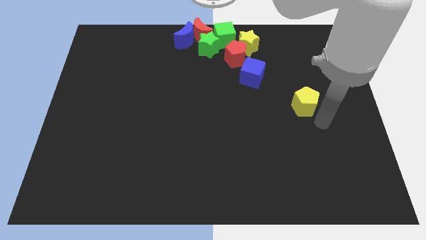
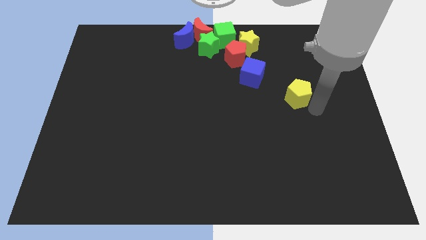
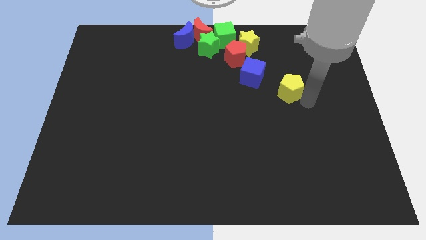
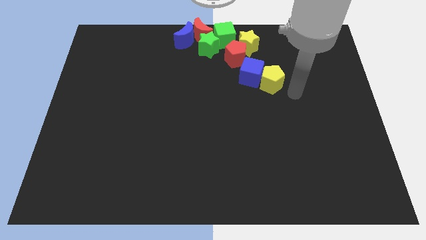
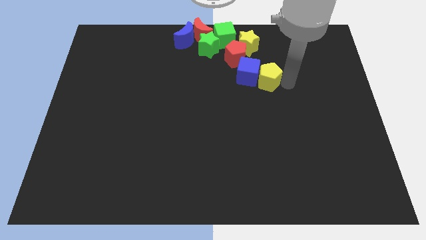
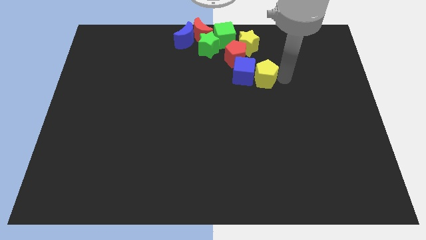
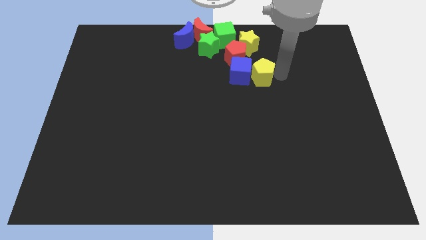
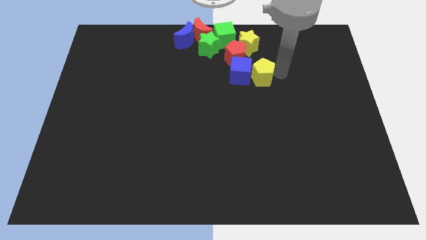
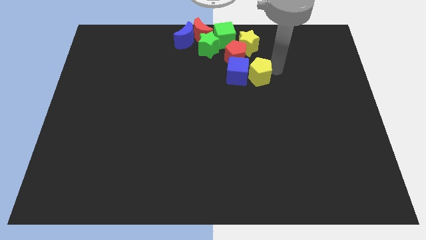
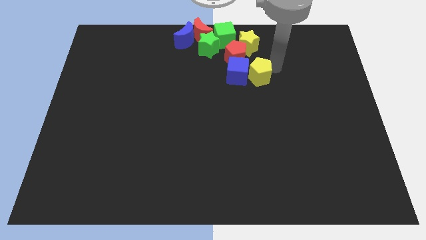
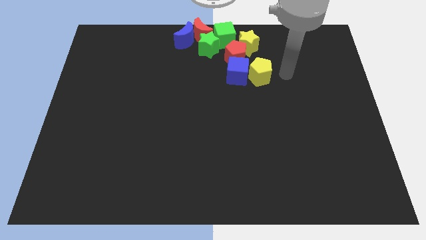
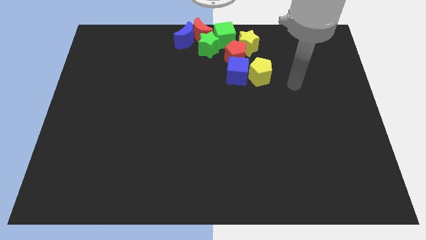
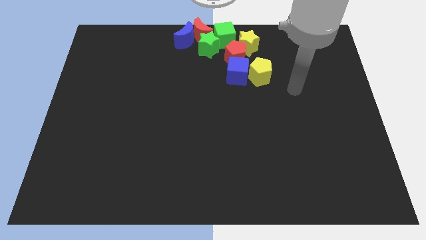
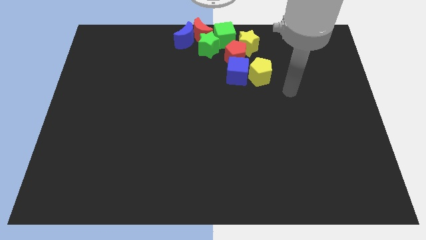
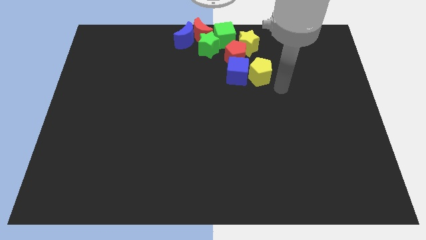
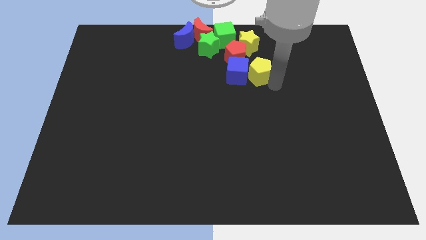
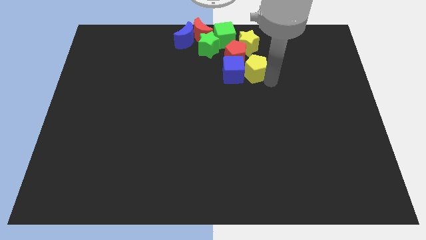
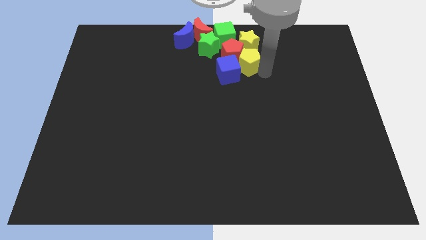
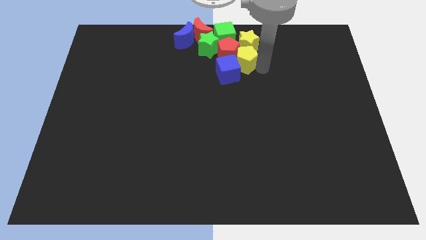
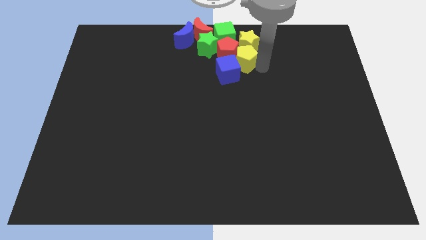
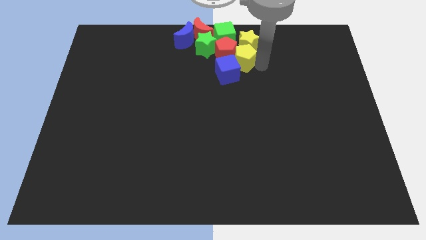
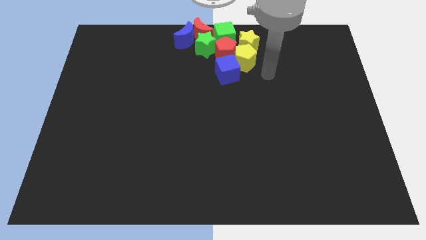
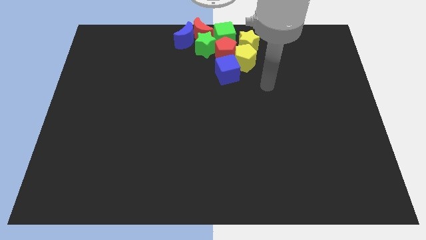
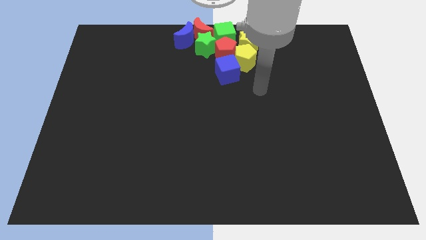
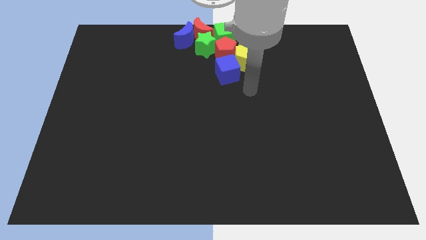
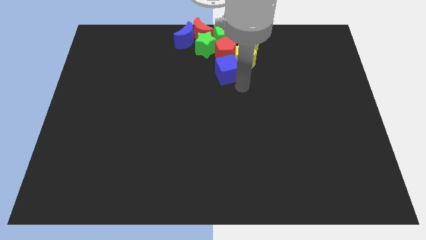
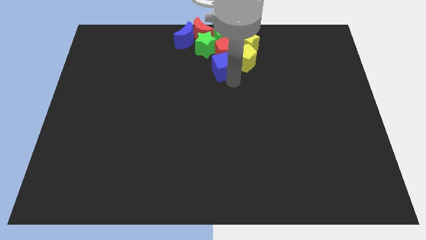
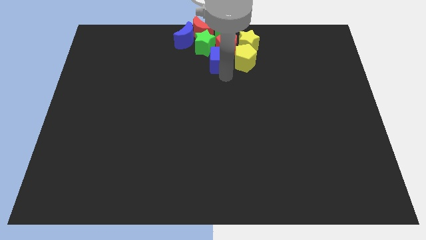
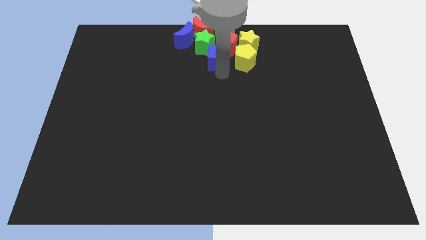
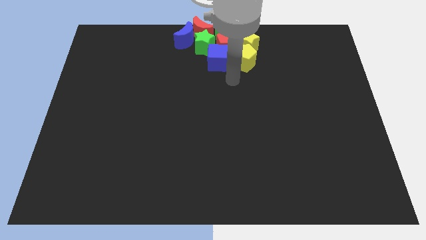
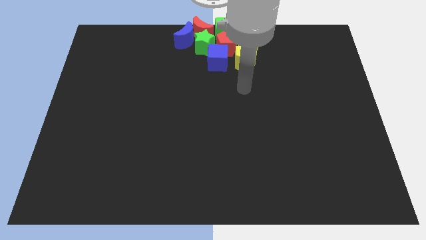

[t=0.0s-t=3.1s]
place the yellow pentagon down to the yellow star

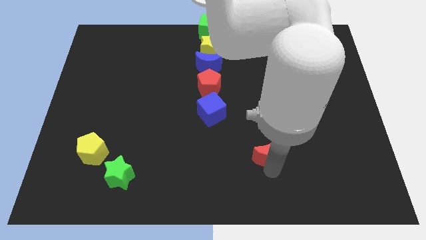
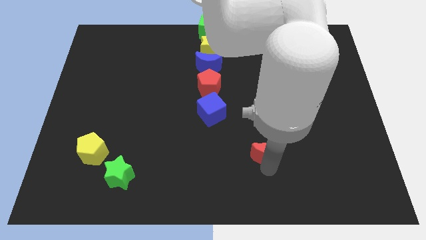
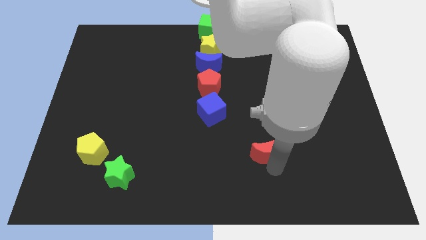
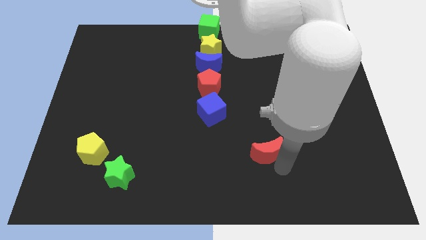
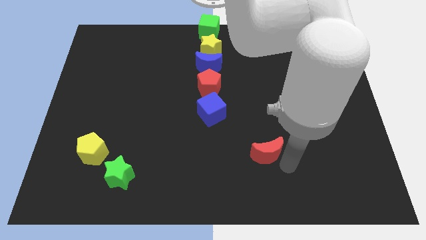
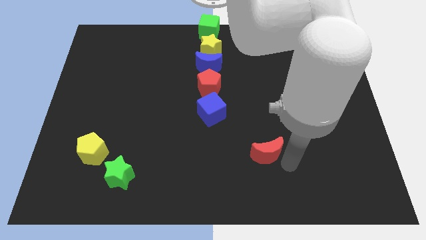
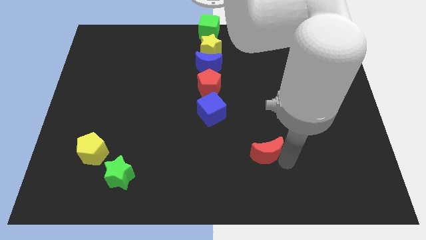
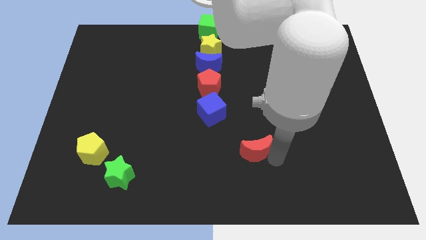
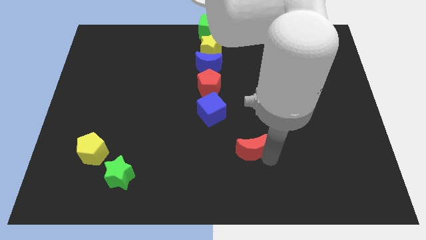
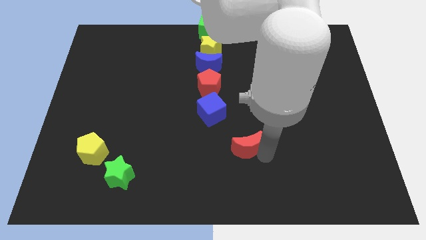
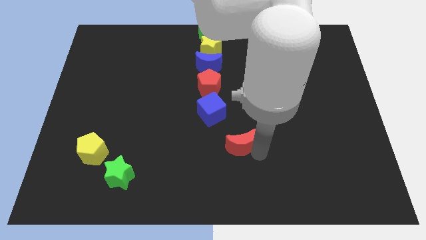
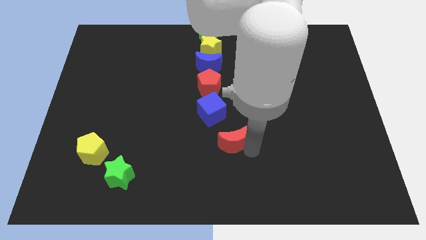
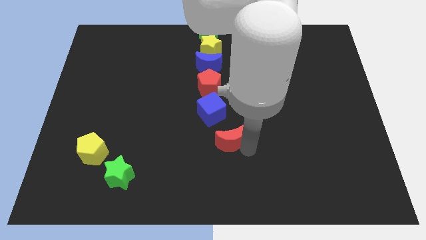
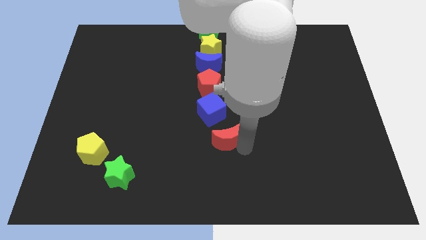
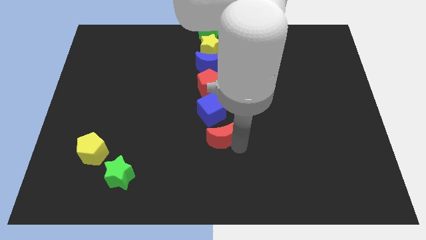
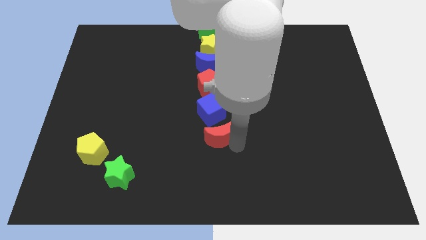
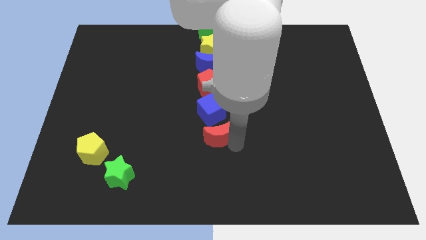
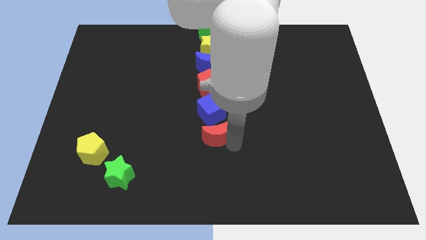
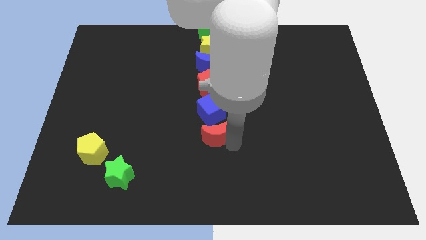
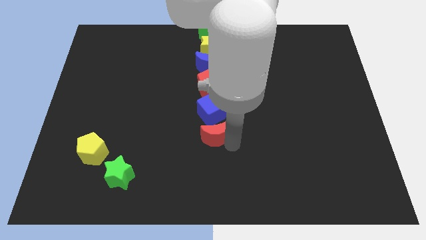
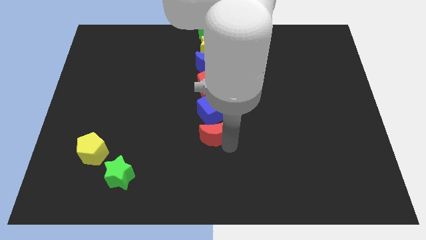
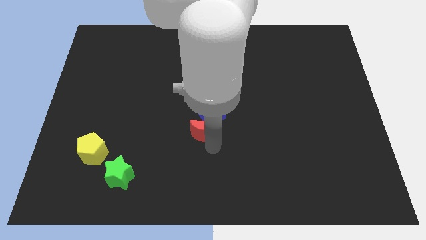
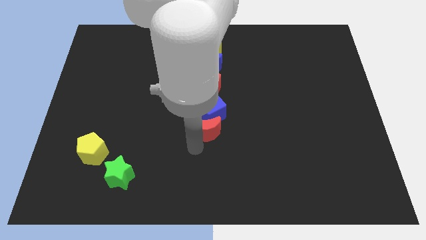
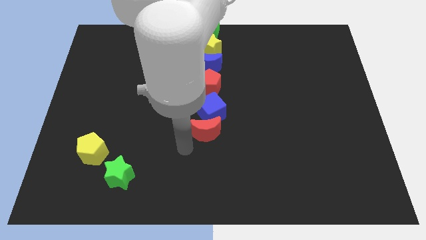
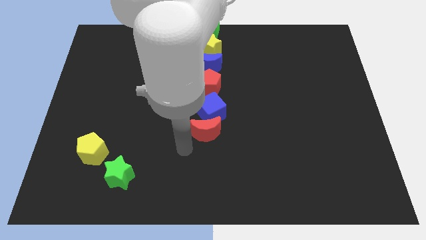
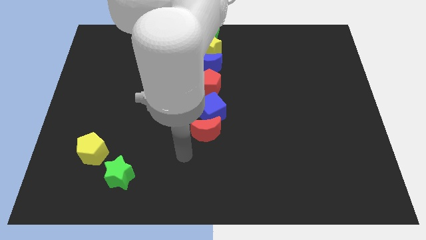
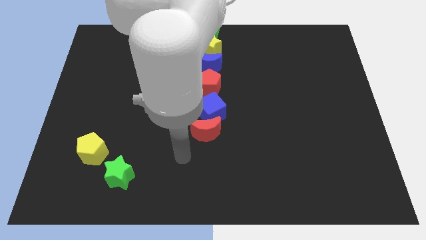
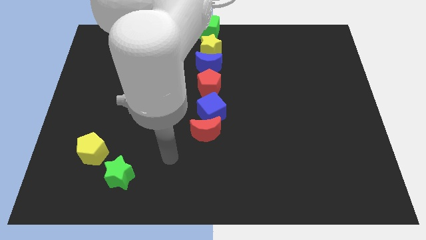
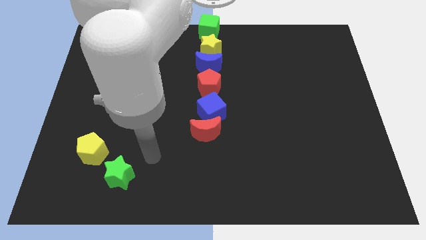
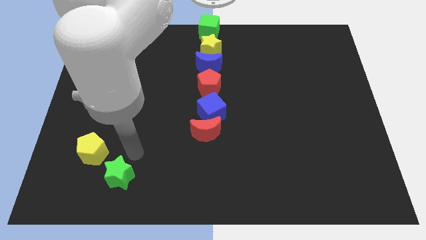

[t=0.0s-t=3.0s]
place the red moon under the blue cube

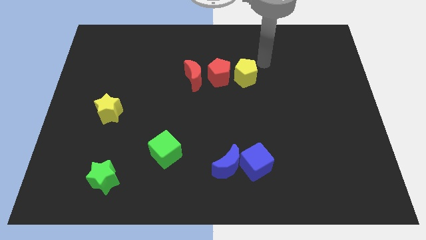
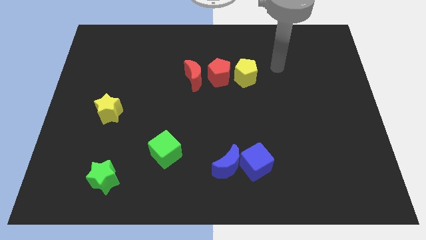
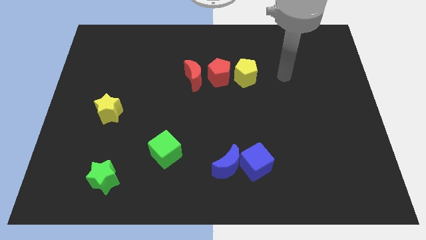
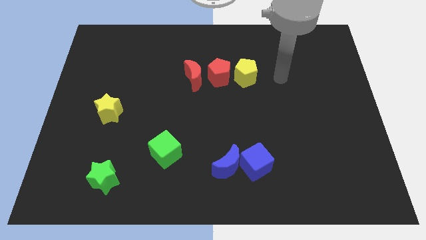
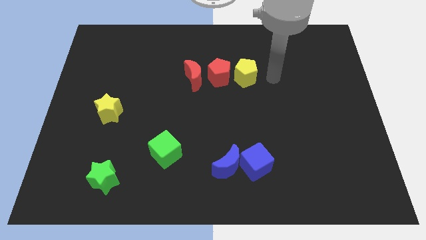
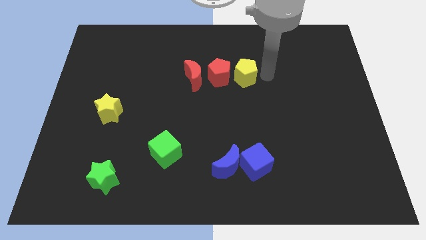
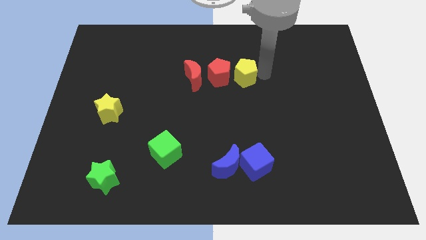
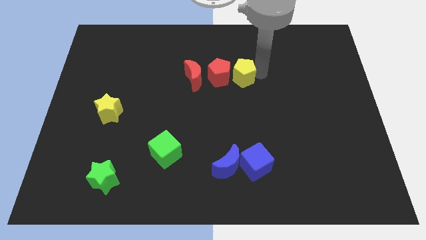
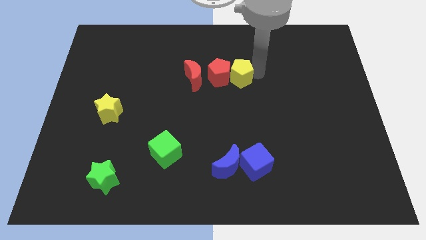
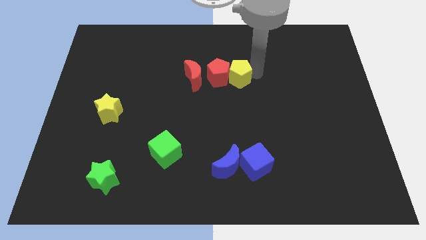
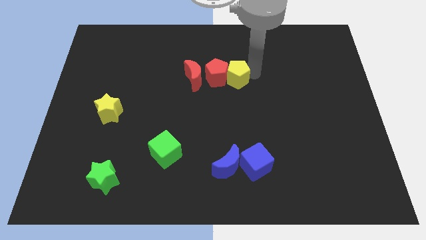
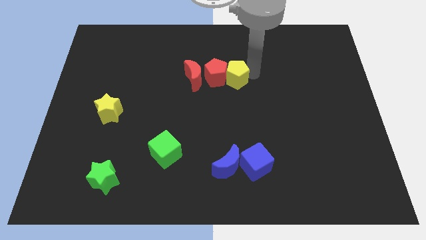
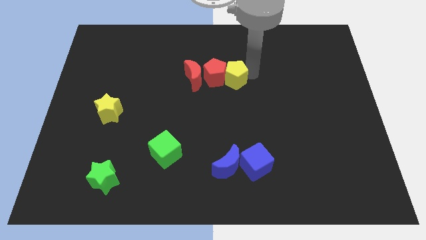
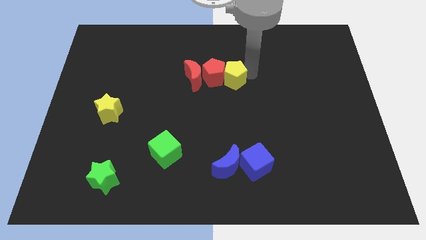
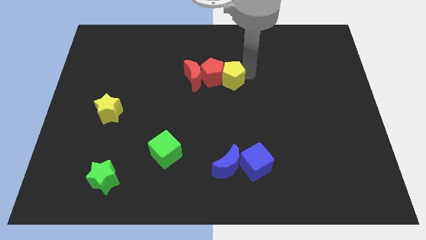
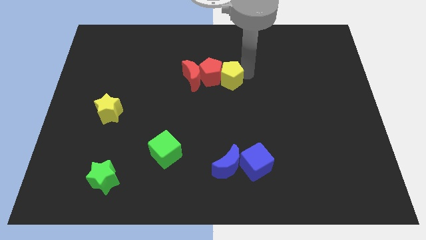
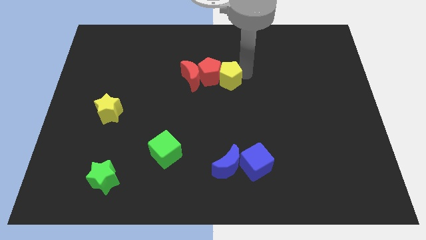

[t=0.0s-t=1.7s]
push yellow pentagon in to red pentagon

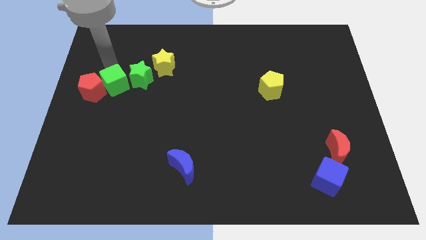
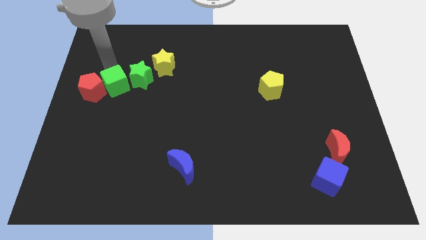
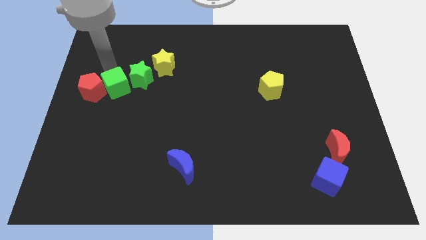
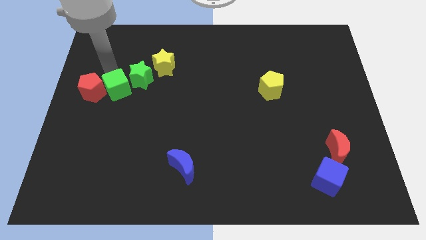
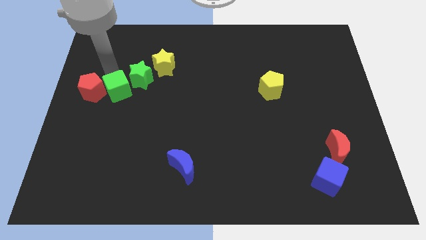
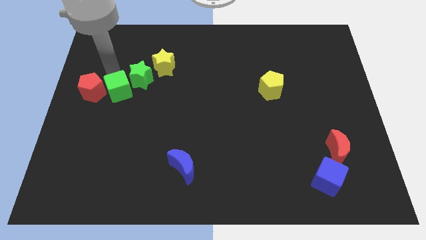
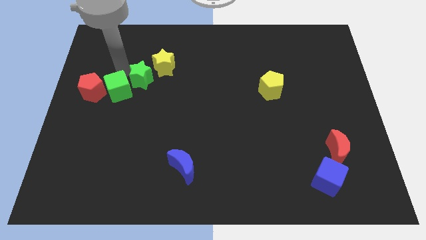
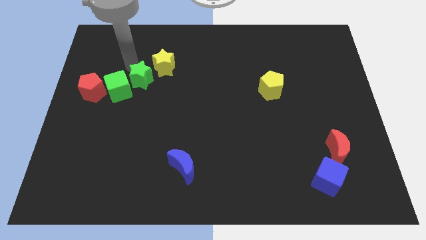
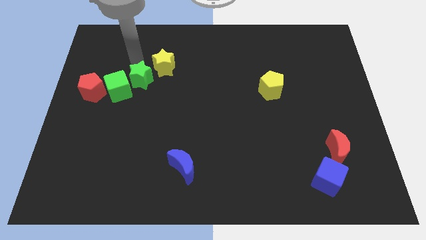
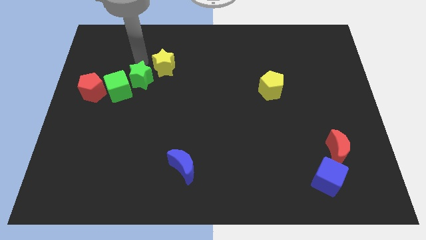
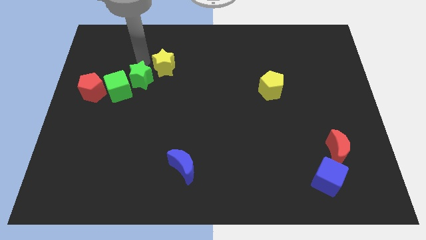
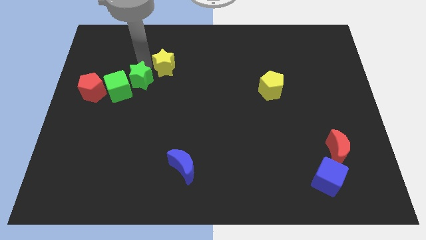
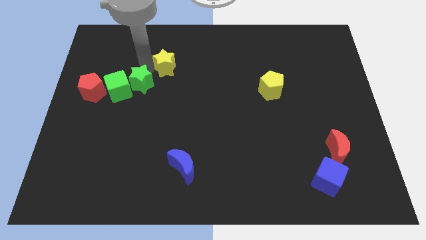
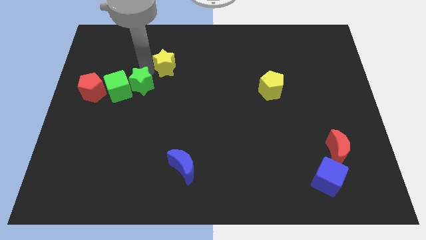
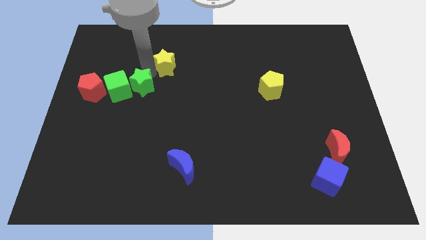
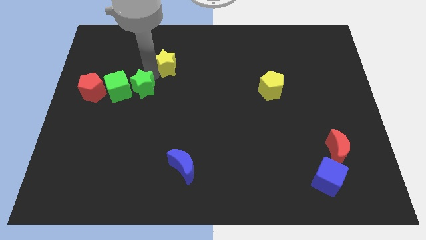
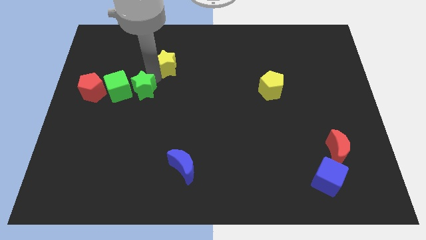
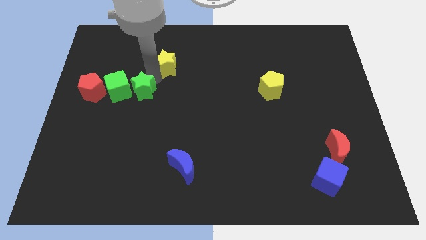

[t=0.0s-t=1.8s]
make a horizontal line by adding a green star
